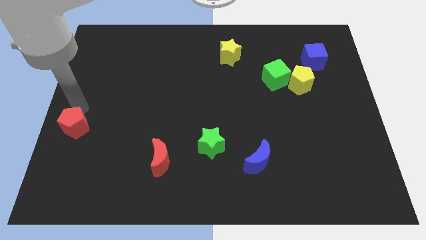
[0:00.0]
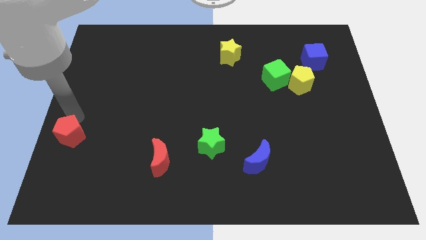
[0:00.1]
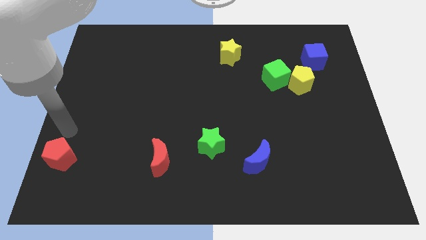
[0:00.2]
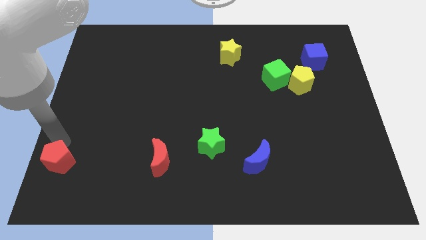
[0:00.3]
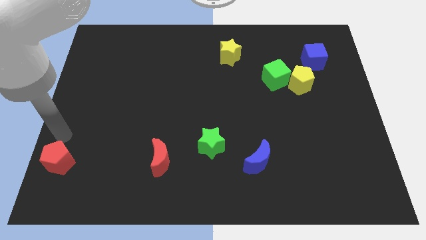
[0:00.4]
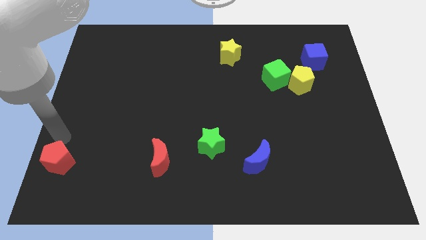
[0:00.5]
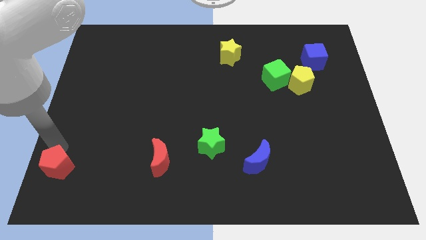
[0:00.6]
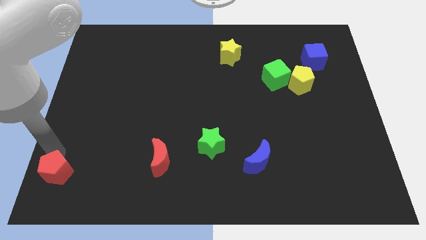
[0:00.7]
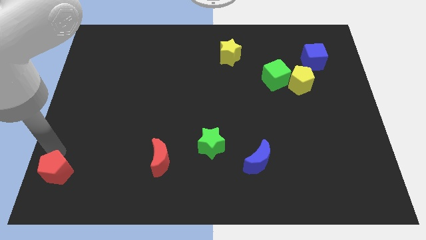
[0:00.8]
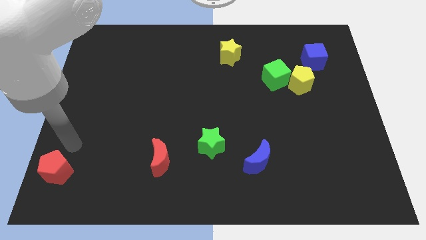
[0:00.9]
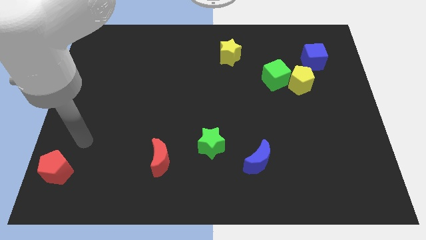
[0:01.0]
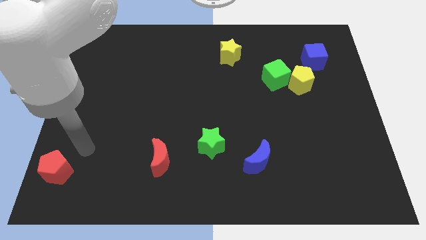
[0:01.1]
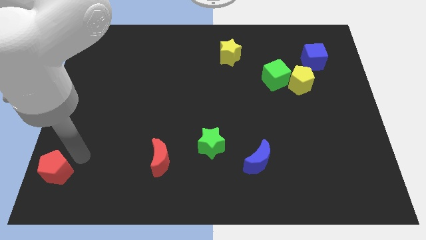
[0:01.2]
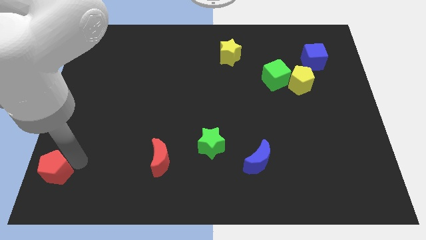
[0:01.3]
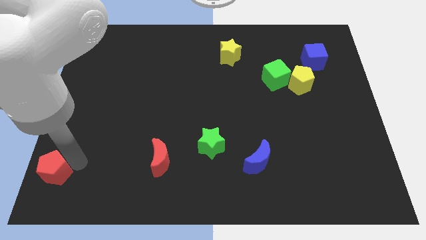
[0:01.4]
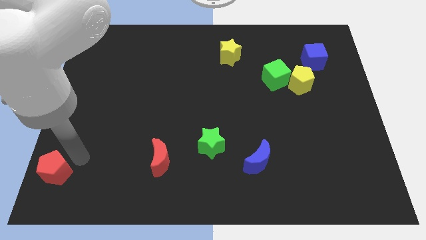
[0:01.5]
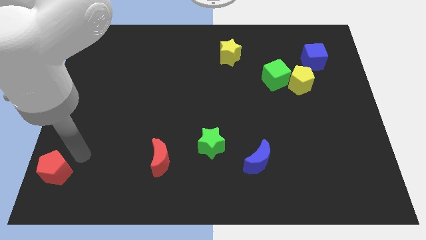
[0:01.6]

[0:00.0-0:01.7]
push red pentagon towards the bottom left corner of the board

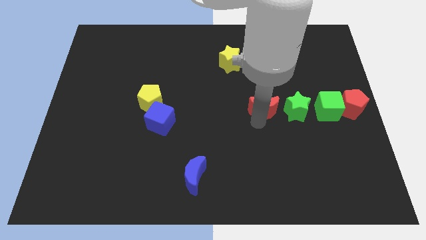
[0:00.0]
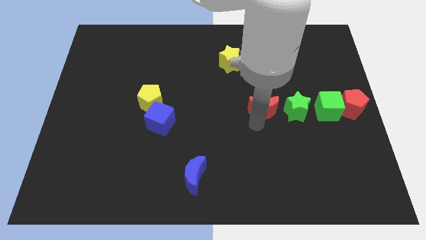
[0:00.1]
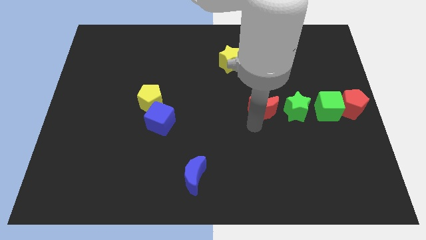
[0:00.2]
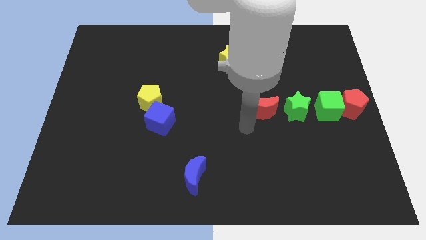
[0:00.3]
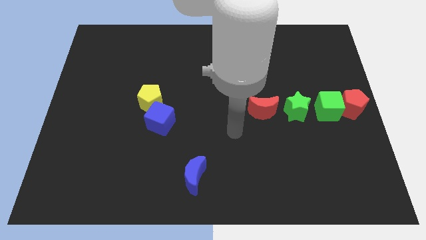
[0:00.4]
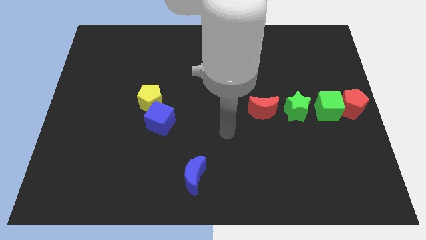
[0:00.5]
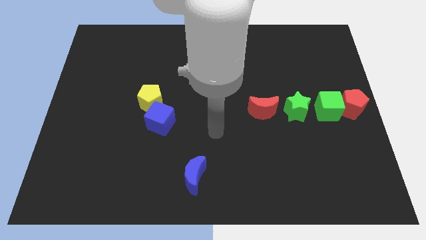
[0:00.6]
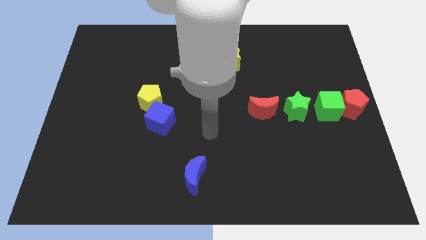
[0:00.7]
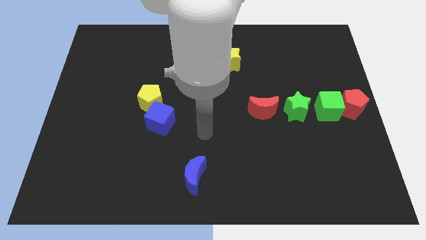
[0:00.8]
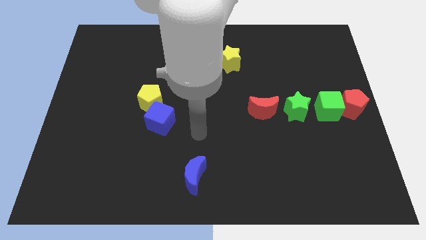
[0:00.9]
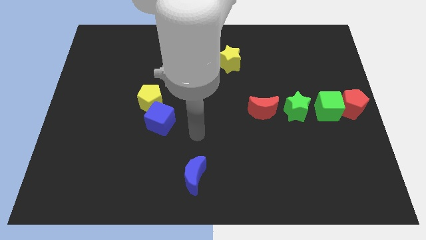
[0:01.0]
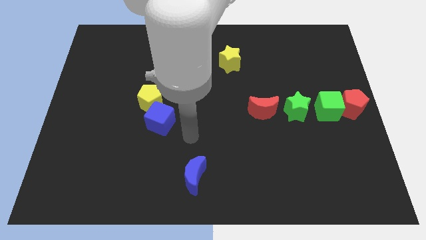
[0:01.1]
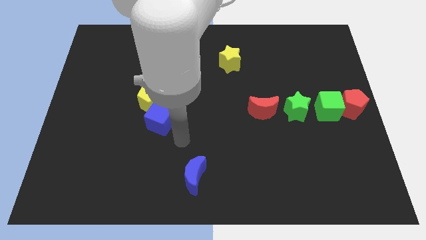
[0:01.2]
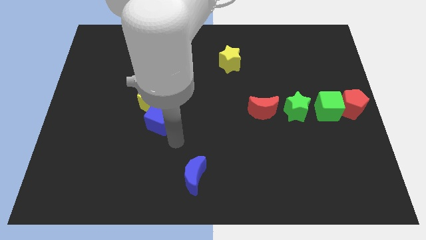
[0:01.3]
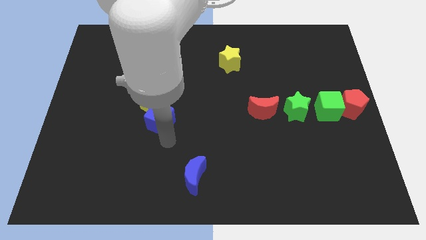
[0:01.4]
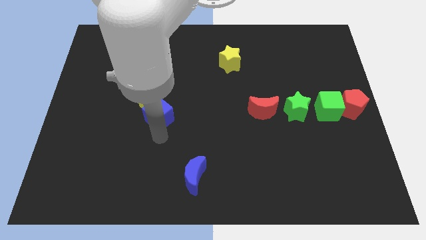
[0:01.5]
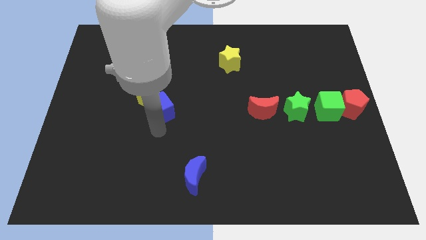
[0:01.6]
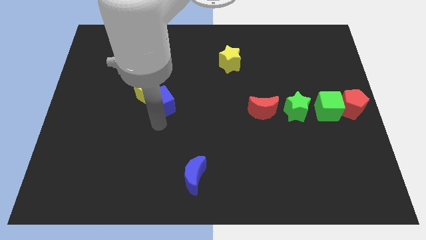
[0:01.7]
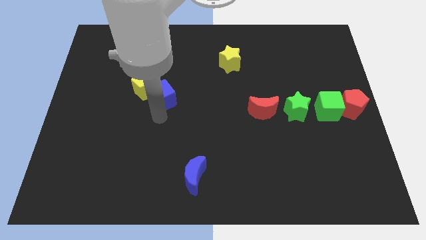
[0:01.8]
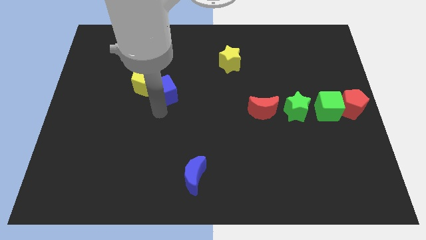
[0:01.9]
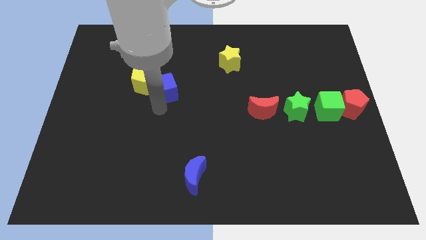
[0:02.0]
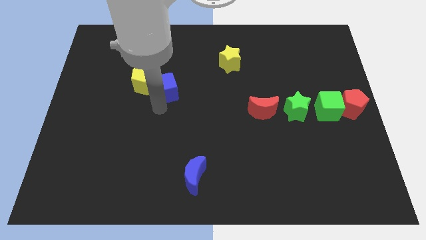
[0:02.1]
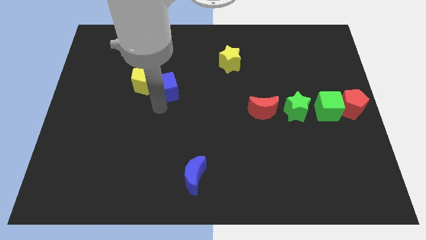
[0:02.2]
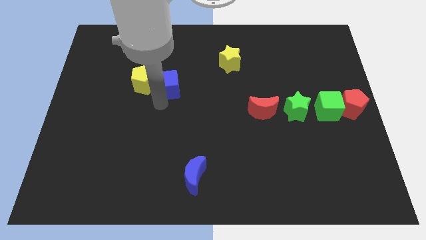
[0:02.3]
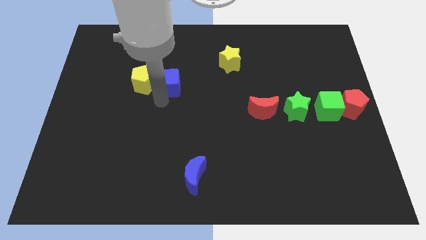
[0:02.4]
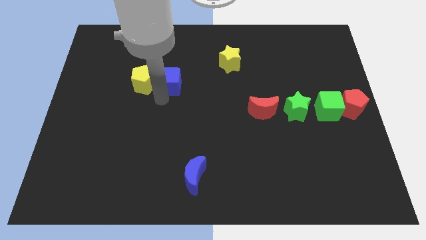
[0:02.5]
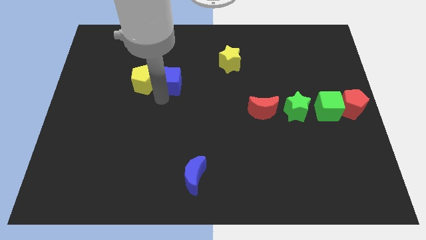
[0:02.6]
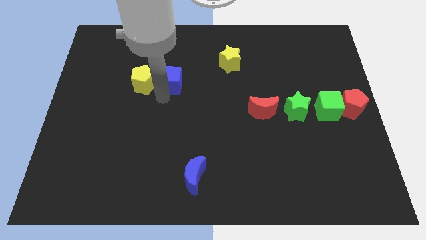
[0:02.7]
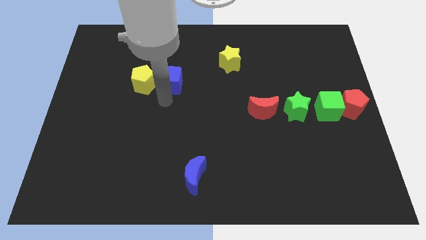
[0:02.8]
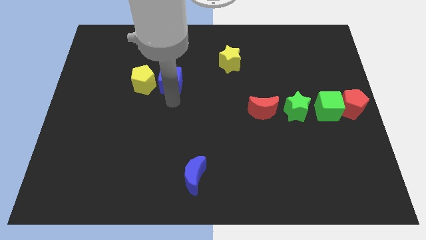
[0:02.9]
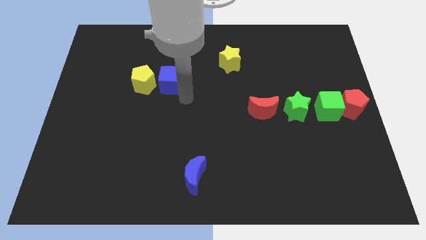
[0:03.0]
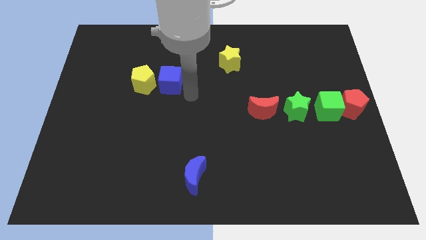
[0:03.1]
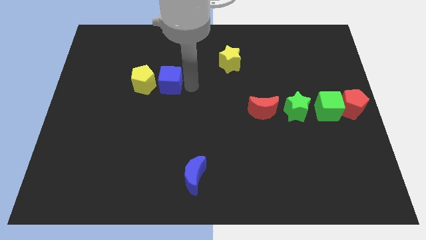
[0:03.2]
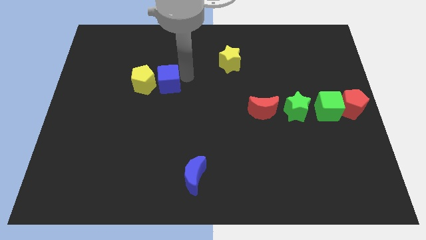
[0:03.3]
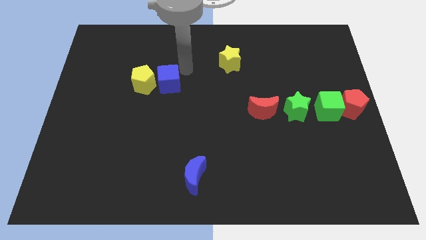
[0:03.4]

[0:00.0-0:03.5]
push the blue cube and yelow pentagon to the top left side of the table

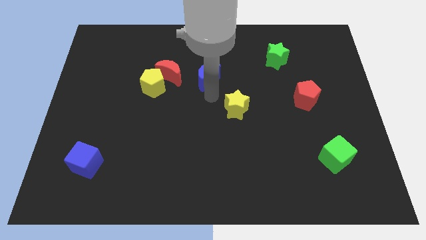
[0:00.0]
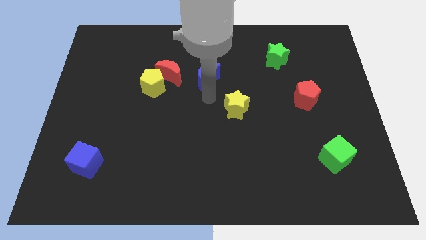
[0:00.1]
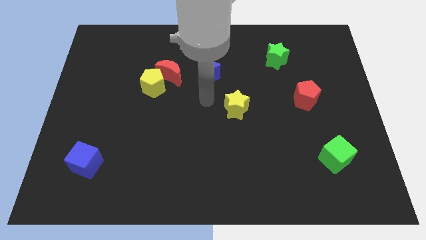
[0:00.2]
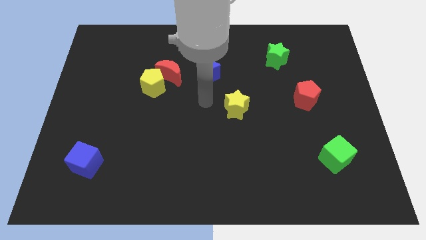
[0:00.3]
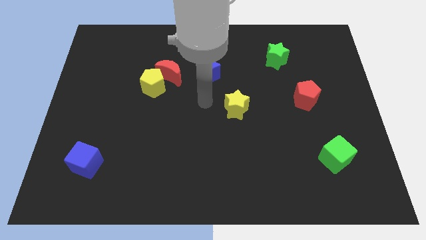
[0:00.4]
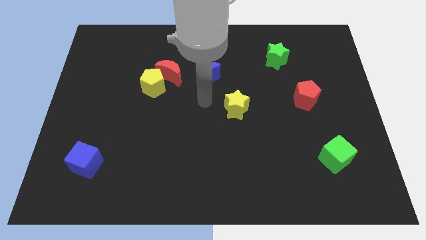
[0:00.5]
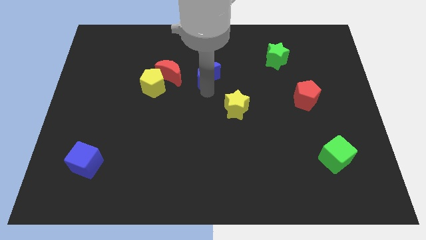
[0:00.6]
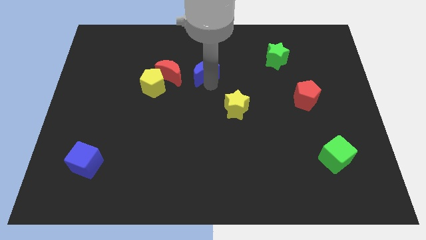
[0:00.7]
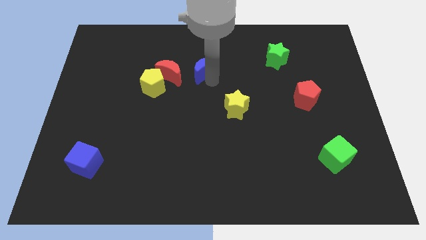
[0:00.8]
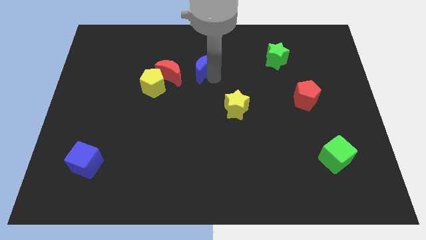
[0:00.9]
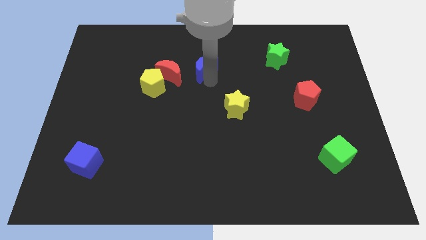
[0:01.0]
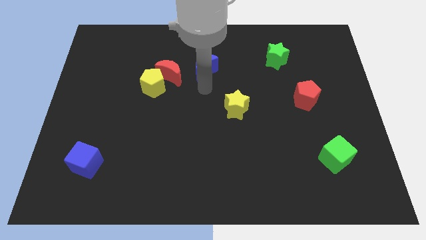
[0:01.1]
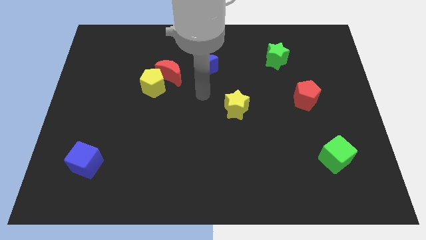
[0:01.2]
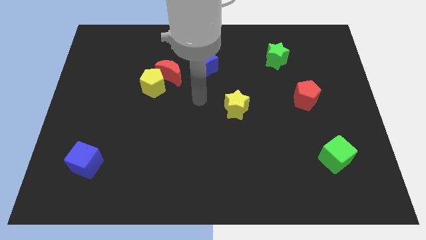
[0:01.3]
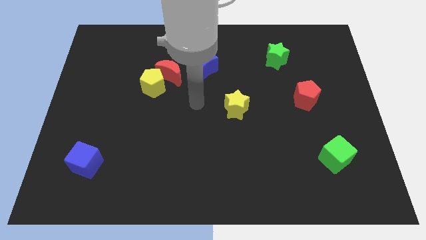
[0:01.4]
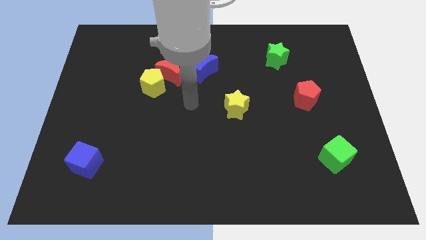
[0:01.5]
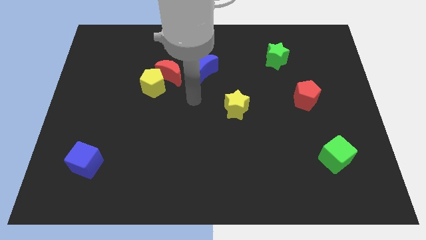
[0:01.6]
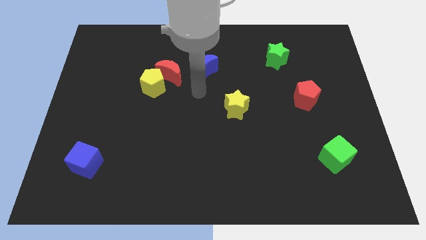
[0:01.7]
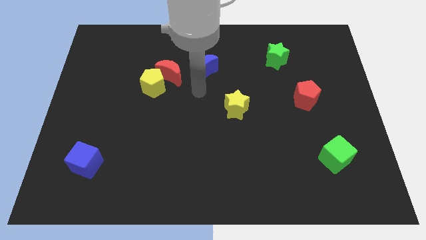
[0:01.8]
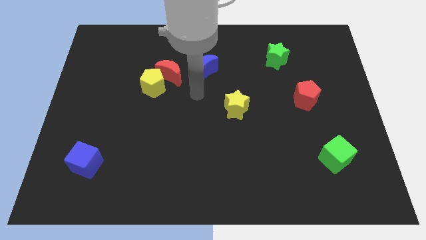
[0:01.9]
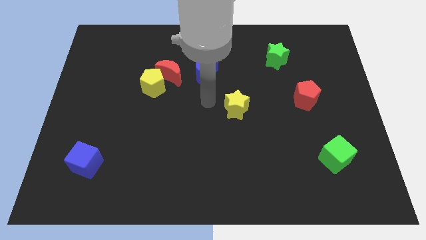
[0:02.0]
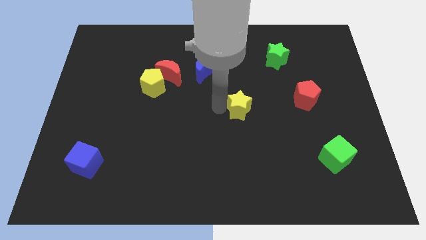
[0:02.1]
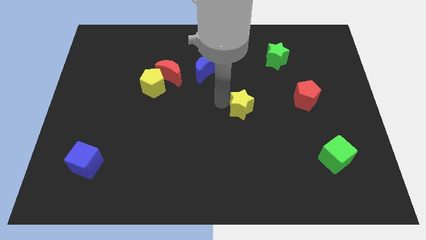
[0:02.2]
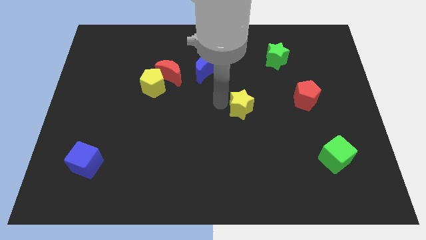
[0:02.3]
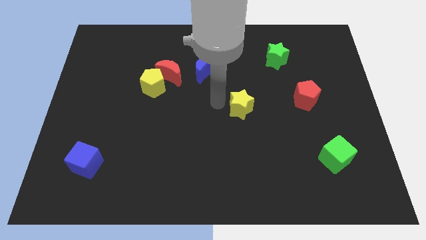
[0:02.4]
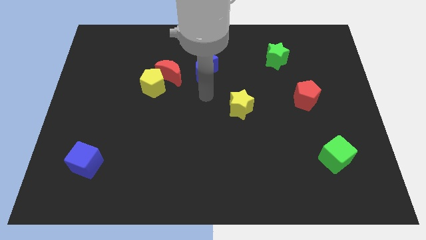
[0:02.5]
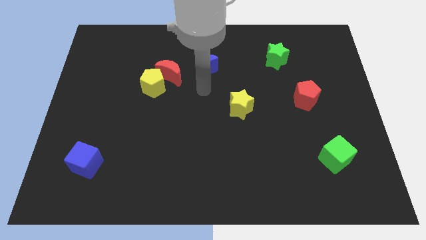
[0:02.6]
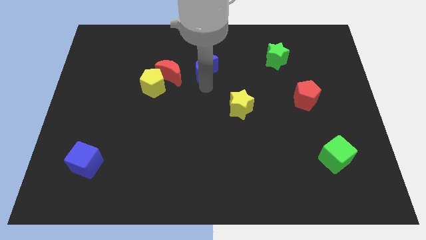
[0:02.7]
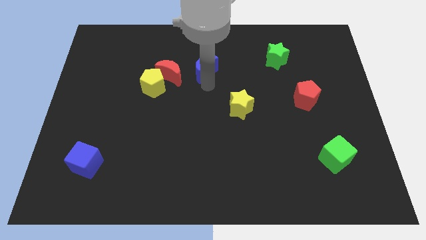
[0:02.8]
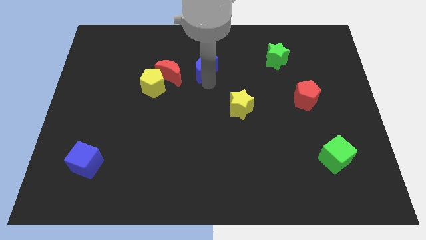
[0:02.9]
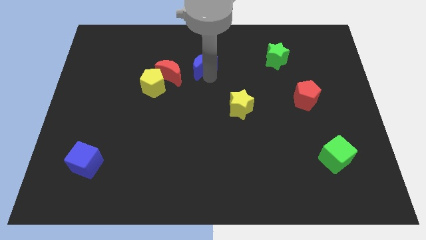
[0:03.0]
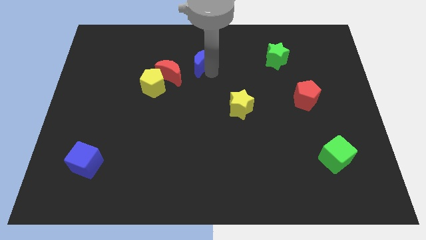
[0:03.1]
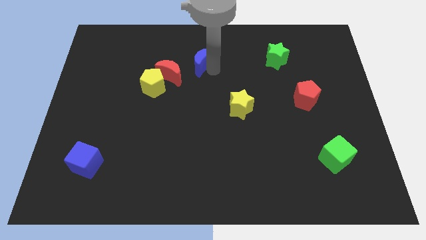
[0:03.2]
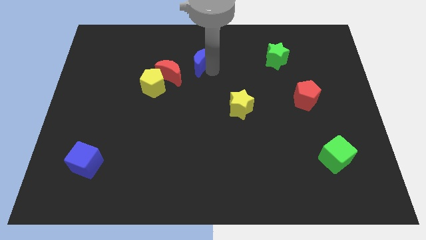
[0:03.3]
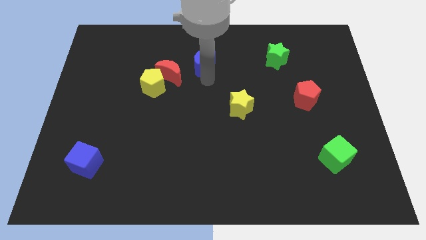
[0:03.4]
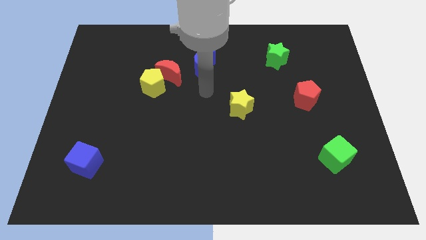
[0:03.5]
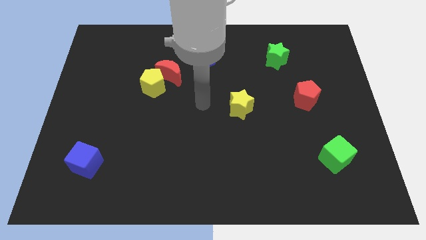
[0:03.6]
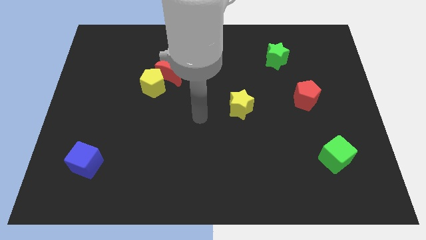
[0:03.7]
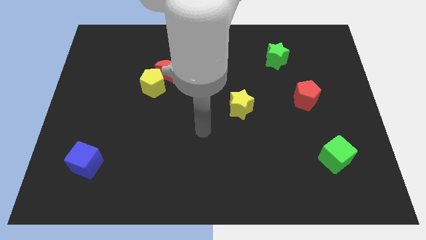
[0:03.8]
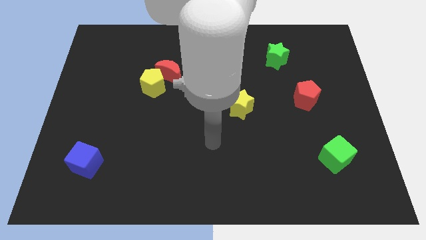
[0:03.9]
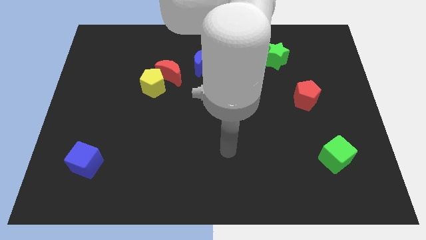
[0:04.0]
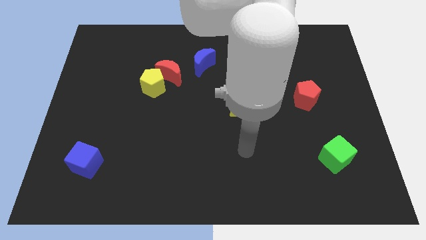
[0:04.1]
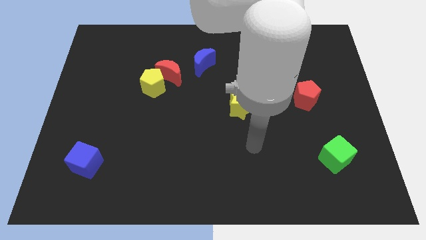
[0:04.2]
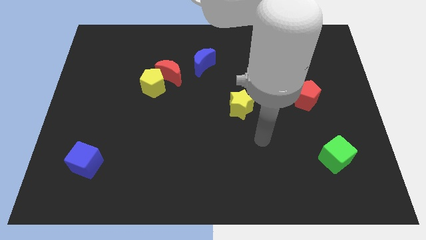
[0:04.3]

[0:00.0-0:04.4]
push the blue moon up slightly
